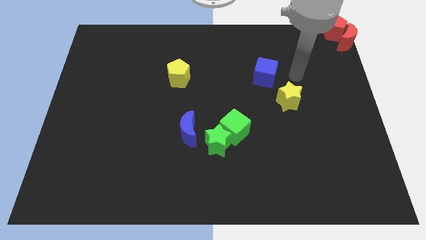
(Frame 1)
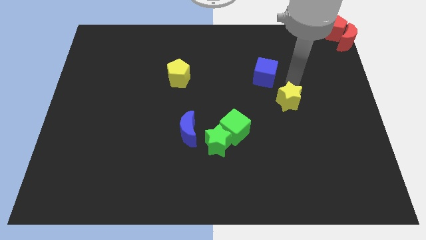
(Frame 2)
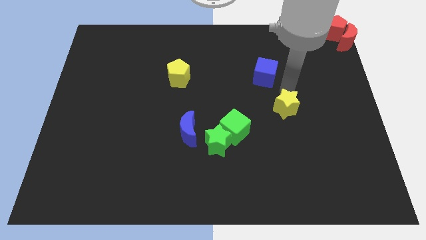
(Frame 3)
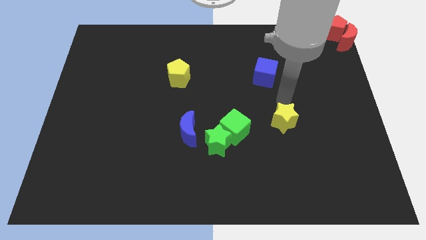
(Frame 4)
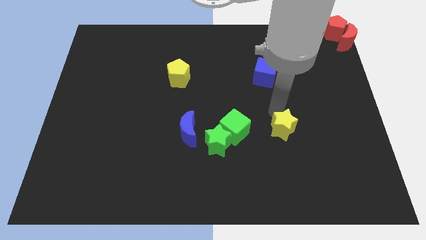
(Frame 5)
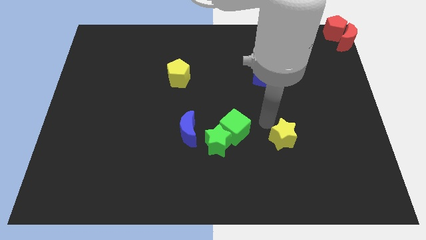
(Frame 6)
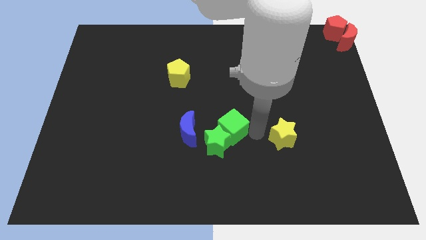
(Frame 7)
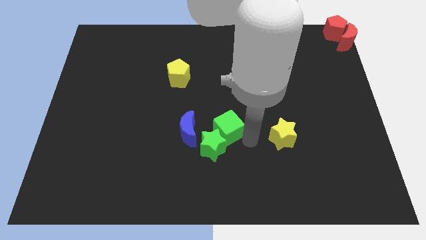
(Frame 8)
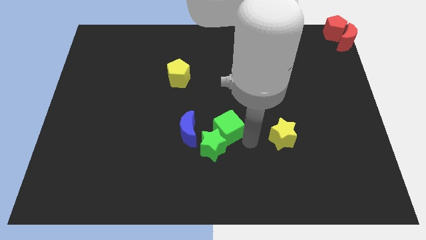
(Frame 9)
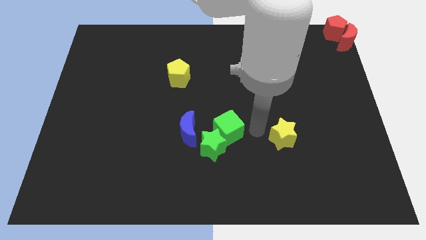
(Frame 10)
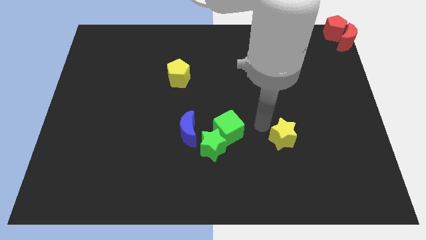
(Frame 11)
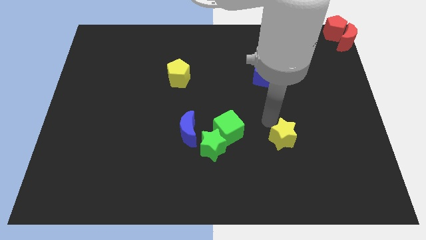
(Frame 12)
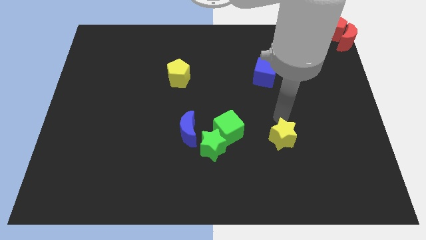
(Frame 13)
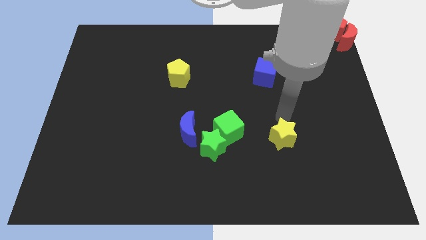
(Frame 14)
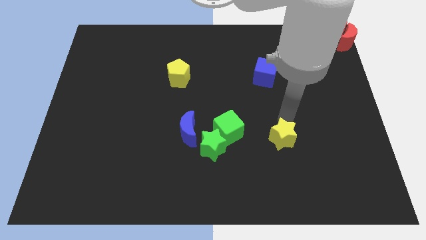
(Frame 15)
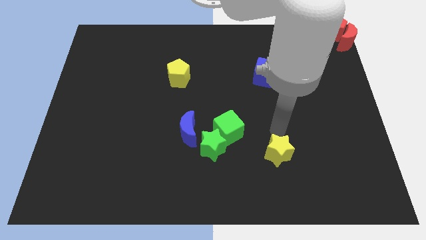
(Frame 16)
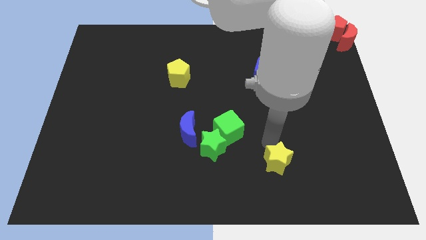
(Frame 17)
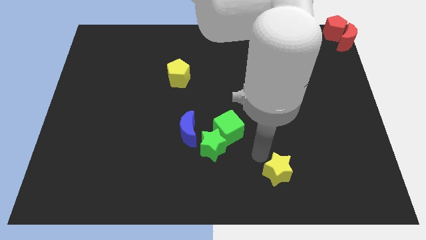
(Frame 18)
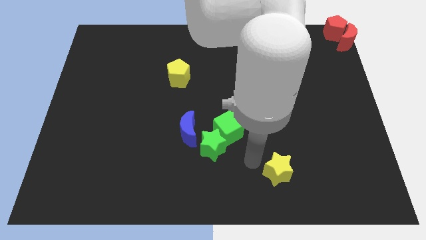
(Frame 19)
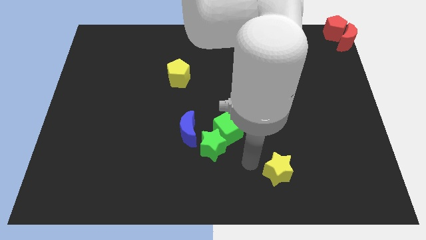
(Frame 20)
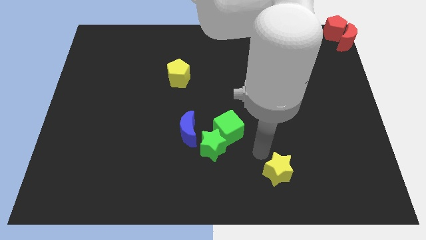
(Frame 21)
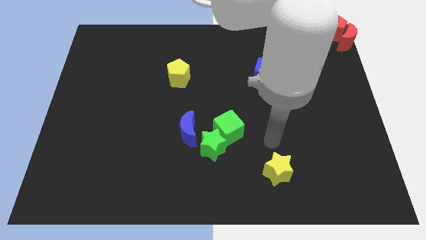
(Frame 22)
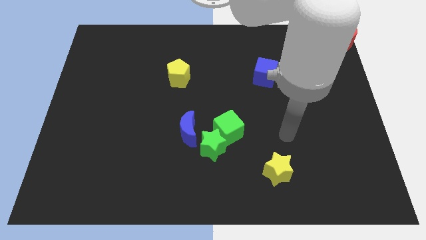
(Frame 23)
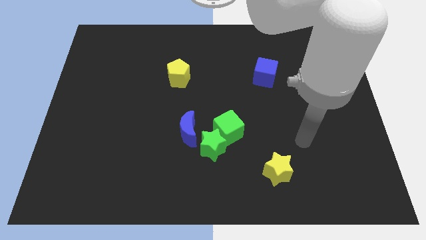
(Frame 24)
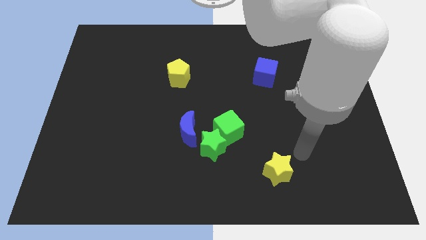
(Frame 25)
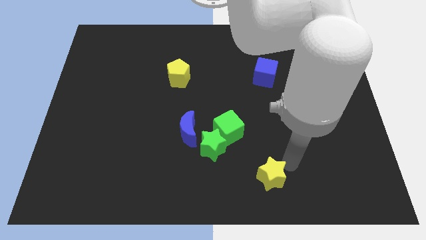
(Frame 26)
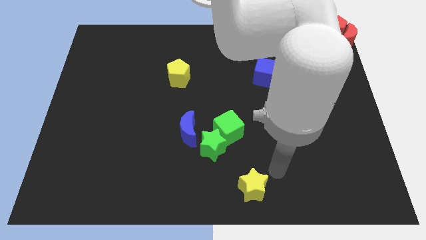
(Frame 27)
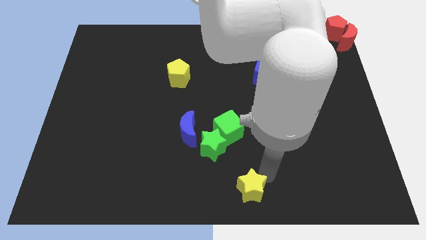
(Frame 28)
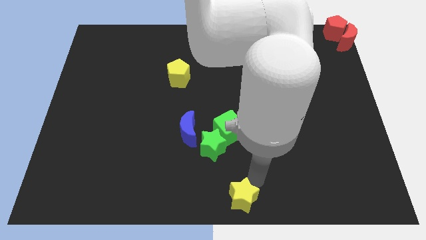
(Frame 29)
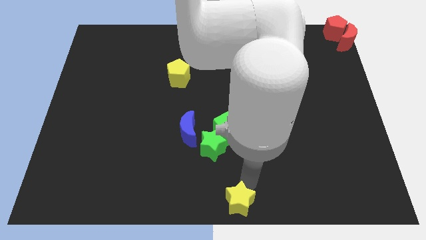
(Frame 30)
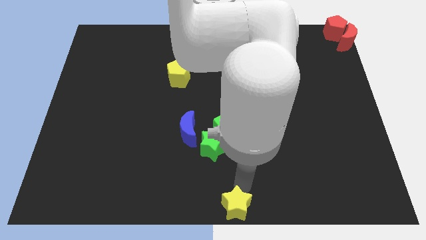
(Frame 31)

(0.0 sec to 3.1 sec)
put the yellow star towards the bottom center

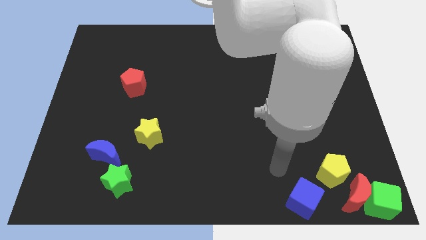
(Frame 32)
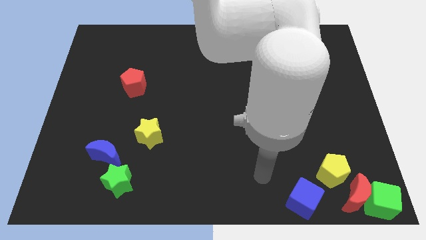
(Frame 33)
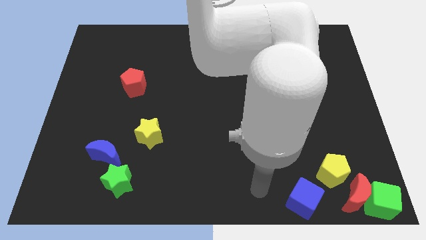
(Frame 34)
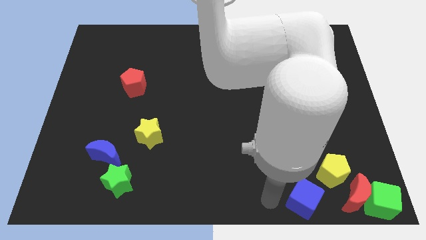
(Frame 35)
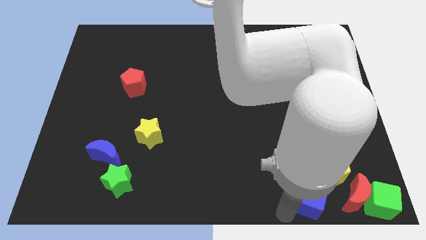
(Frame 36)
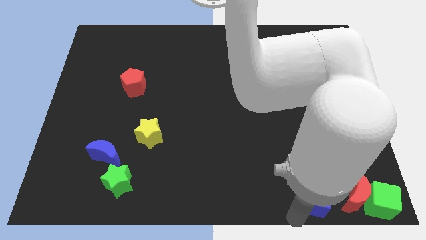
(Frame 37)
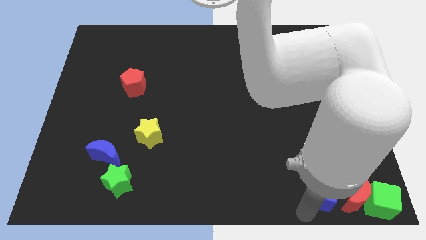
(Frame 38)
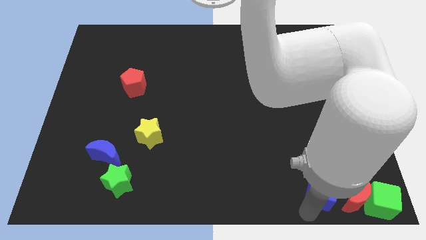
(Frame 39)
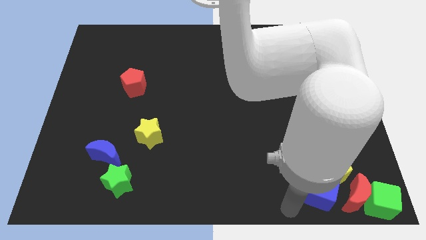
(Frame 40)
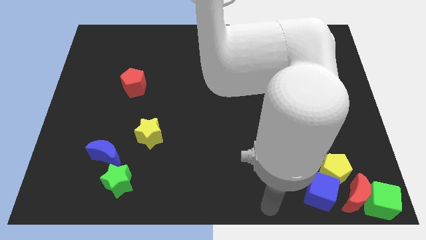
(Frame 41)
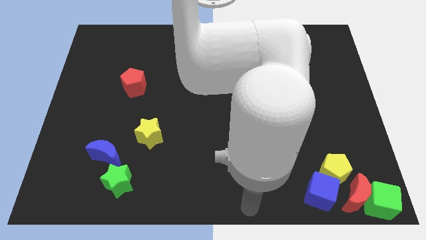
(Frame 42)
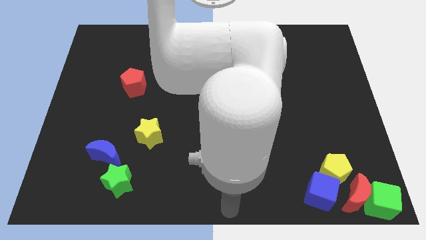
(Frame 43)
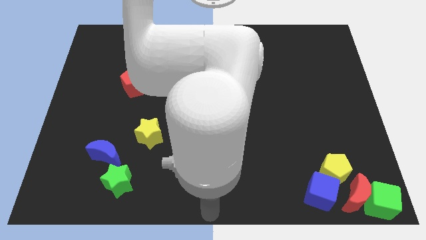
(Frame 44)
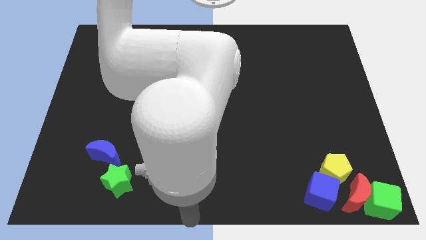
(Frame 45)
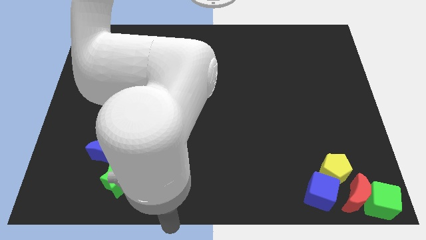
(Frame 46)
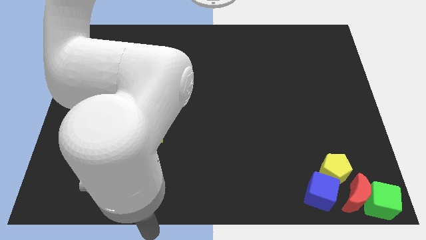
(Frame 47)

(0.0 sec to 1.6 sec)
slide the blue cube into the yellow pentagon

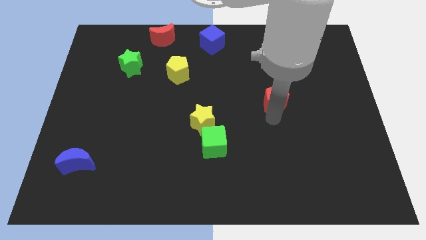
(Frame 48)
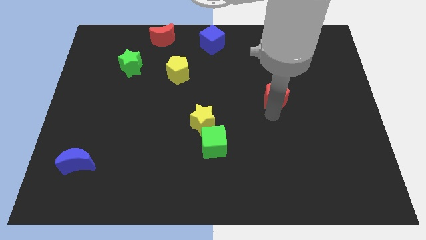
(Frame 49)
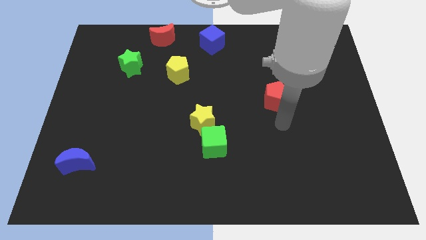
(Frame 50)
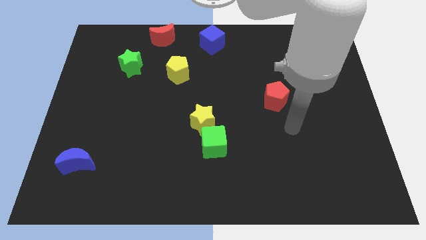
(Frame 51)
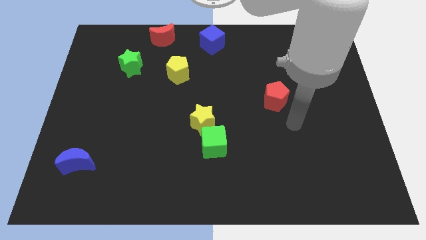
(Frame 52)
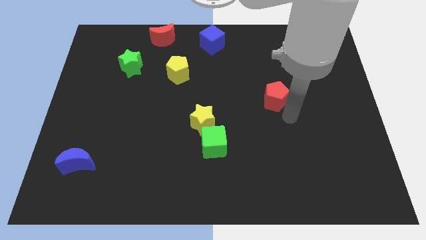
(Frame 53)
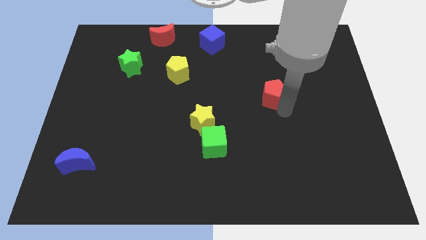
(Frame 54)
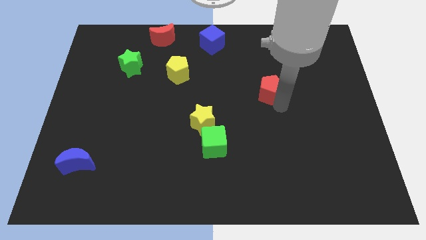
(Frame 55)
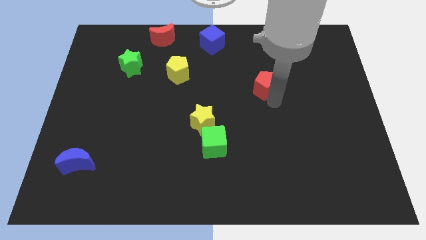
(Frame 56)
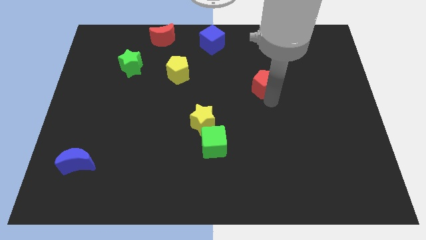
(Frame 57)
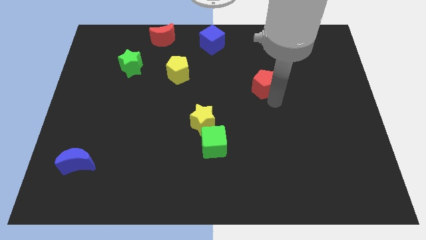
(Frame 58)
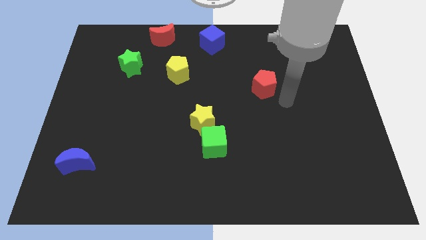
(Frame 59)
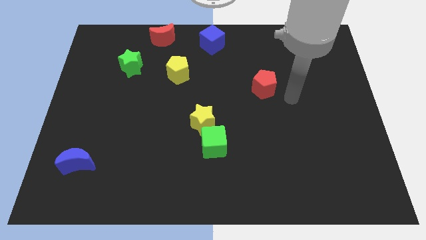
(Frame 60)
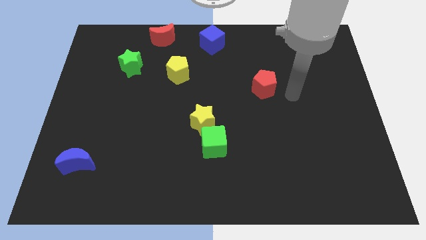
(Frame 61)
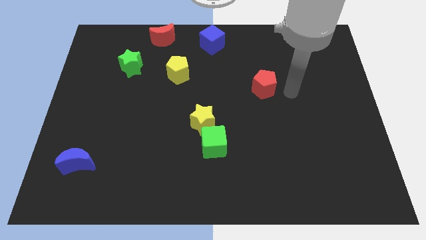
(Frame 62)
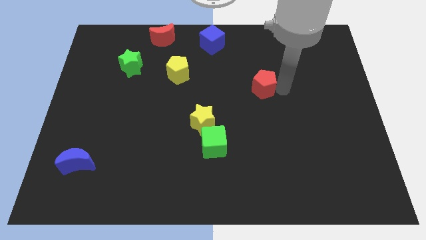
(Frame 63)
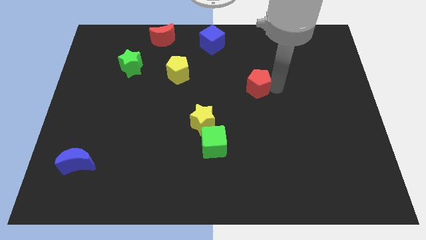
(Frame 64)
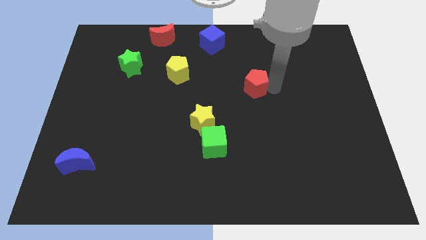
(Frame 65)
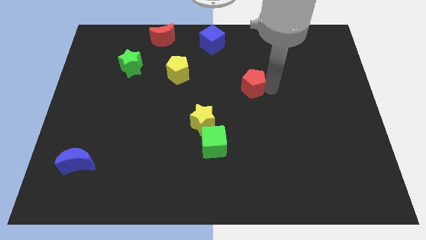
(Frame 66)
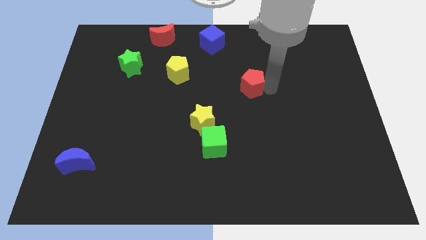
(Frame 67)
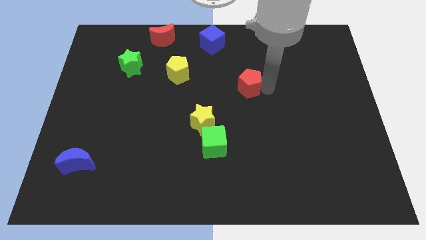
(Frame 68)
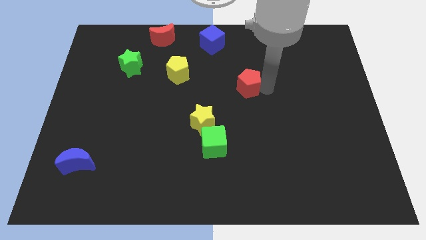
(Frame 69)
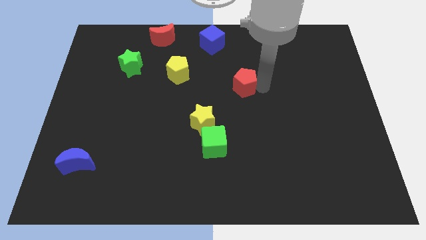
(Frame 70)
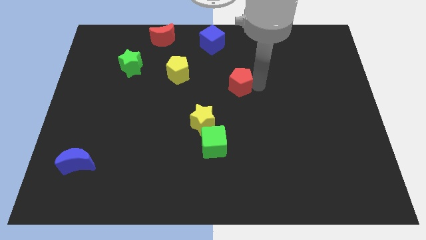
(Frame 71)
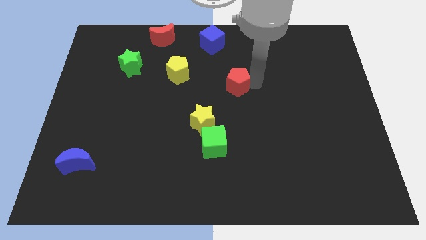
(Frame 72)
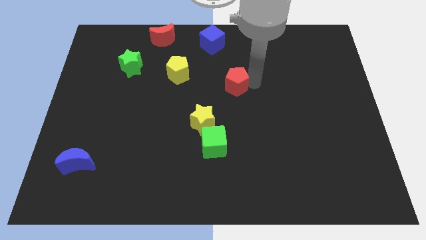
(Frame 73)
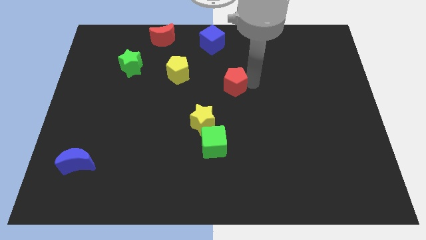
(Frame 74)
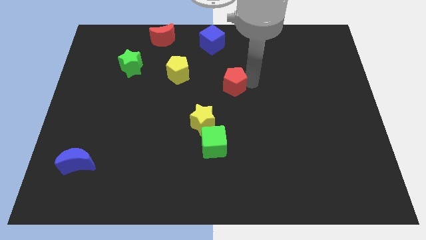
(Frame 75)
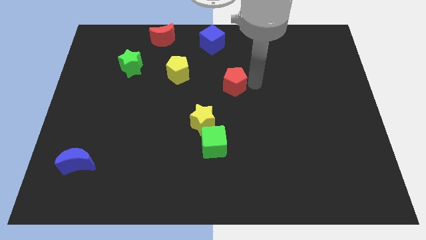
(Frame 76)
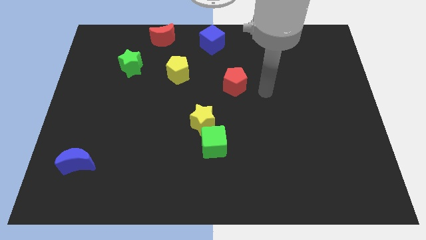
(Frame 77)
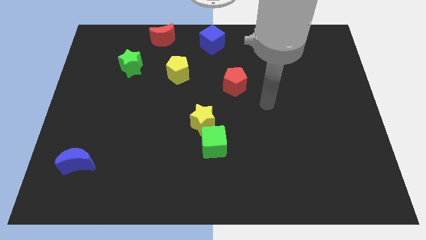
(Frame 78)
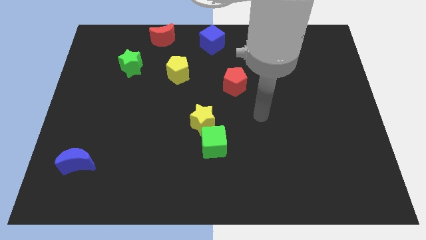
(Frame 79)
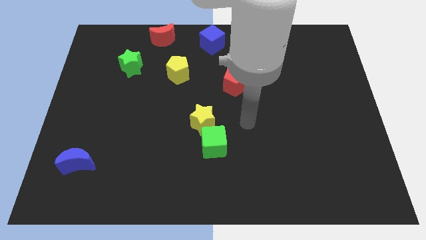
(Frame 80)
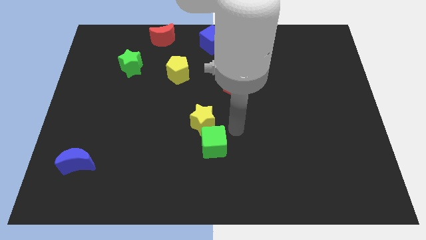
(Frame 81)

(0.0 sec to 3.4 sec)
move the red pentagon to the center of the board

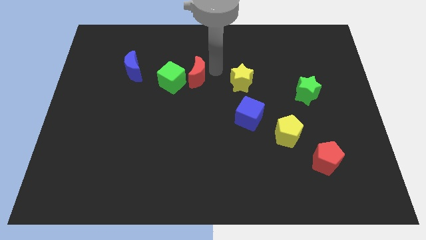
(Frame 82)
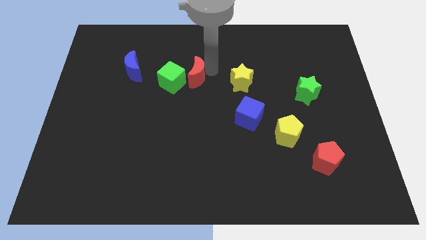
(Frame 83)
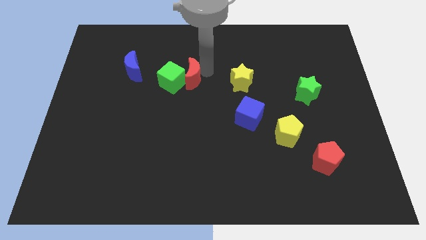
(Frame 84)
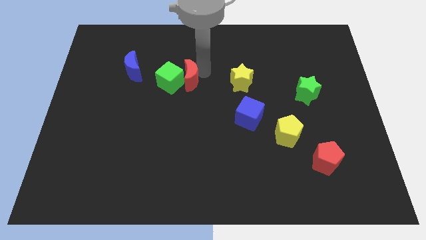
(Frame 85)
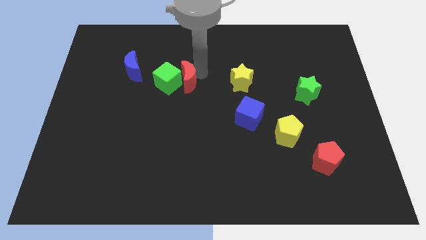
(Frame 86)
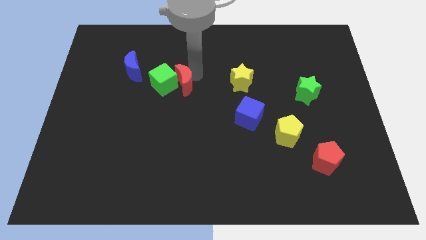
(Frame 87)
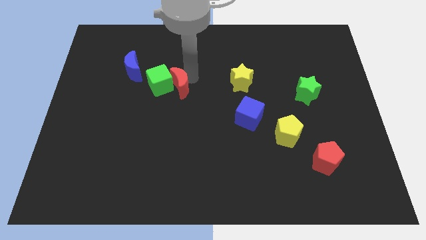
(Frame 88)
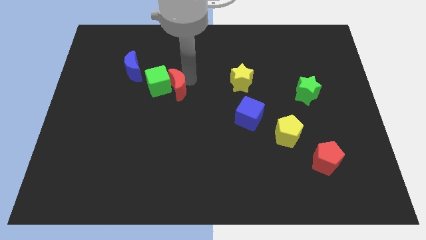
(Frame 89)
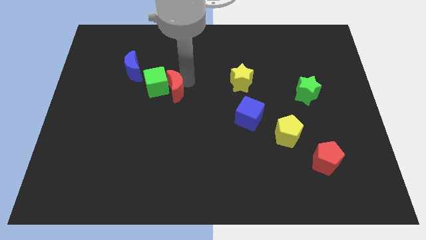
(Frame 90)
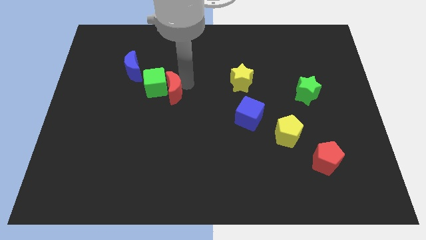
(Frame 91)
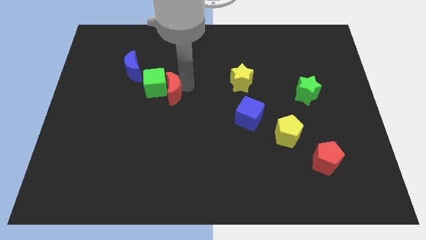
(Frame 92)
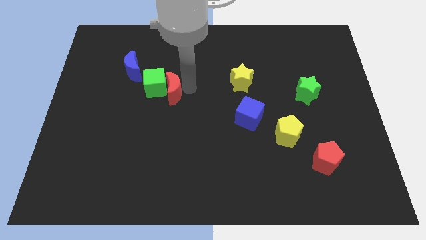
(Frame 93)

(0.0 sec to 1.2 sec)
push red moon into green cube
